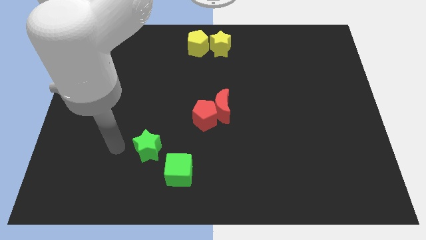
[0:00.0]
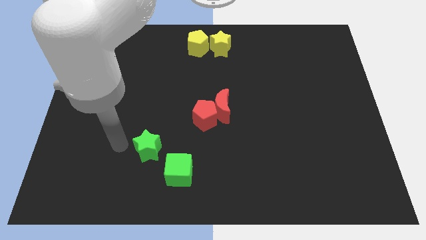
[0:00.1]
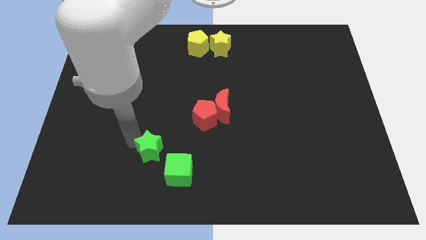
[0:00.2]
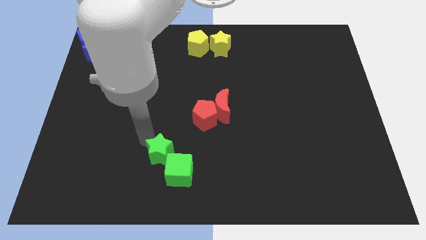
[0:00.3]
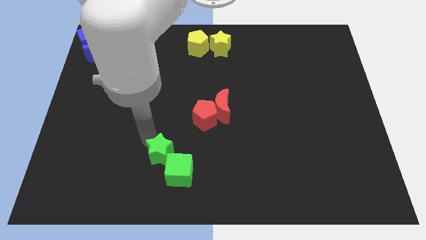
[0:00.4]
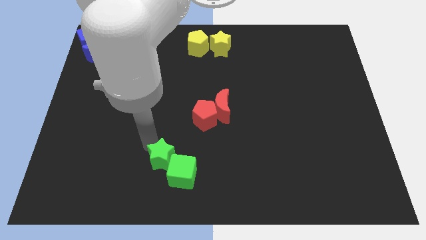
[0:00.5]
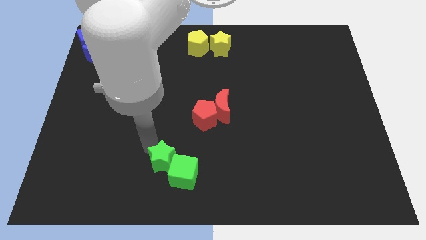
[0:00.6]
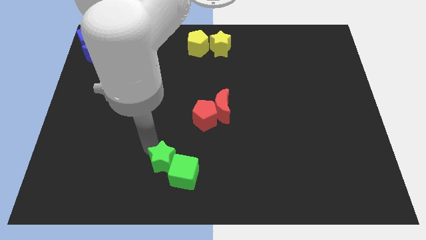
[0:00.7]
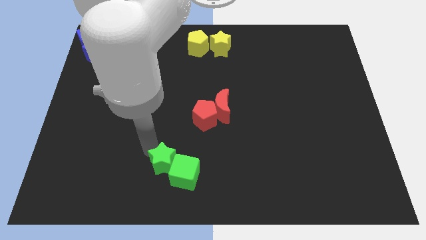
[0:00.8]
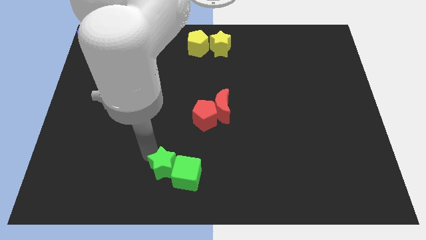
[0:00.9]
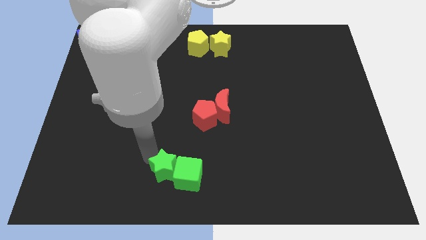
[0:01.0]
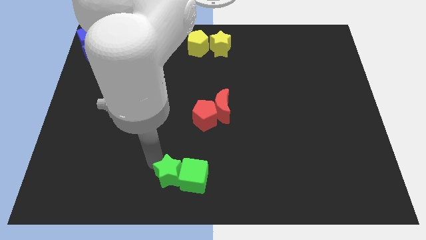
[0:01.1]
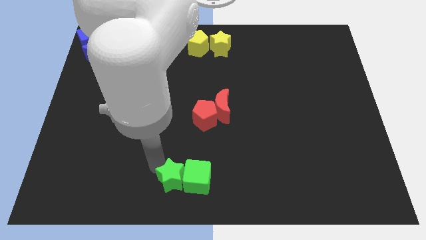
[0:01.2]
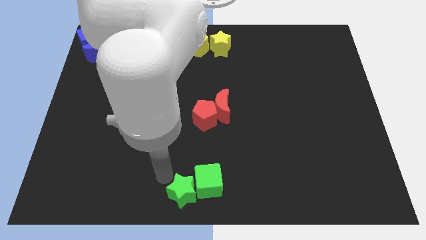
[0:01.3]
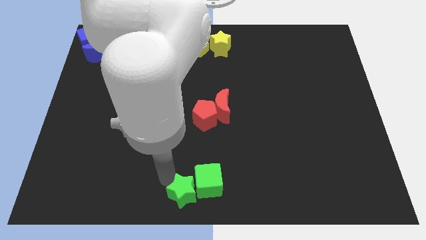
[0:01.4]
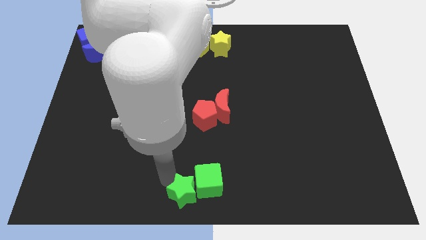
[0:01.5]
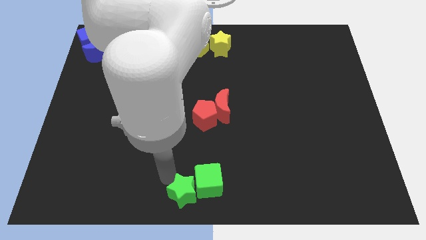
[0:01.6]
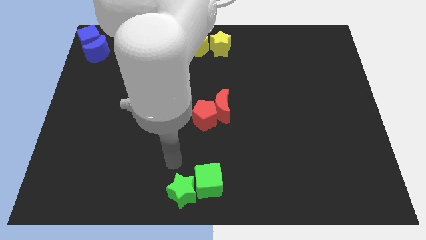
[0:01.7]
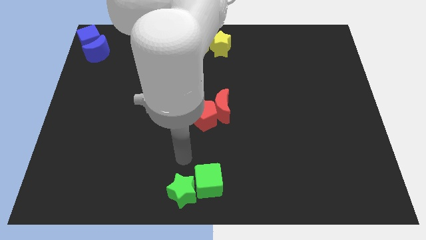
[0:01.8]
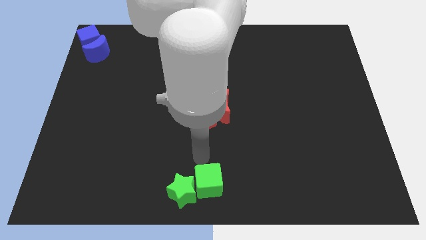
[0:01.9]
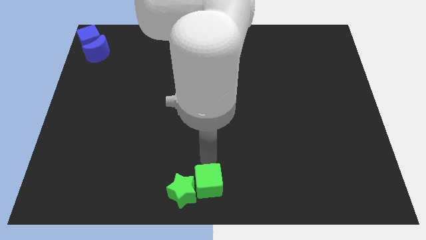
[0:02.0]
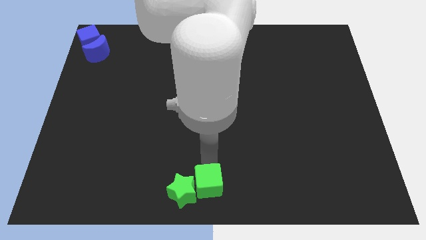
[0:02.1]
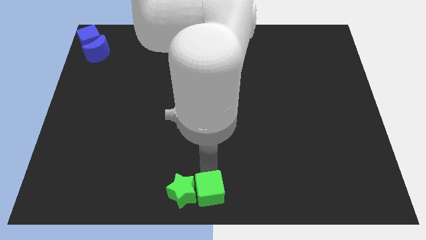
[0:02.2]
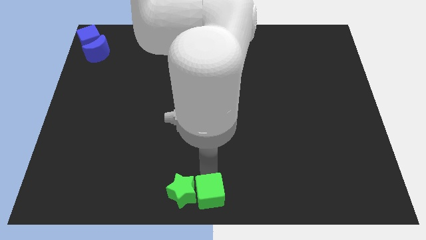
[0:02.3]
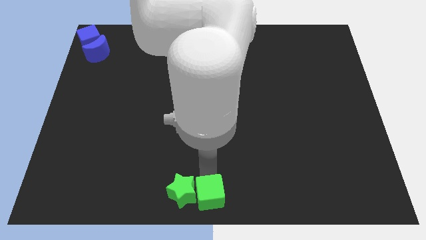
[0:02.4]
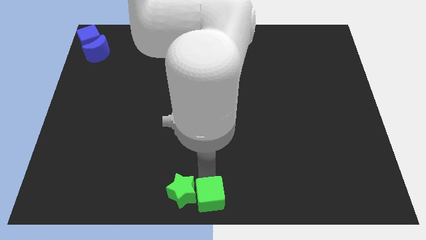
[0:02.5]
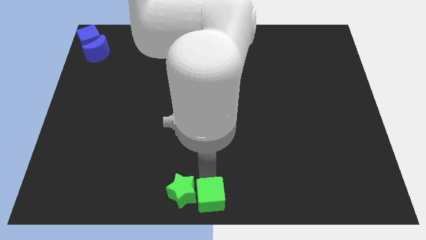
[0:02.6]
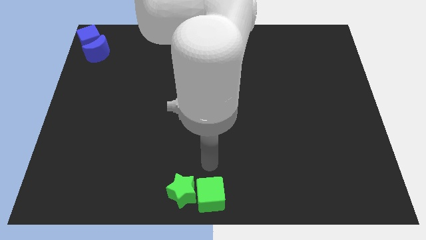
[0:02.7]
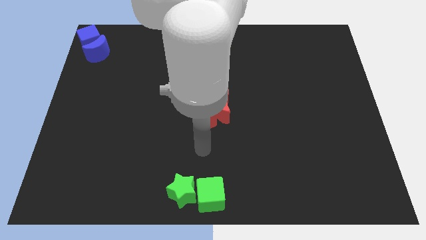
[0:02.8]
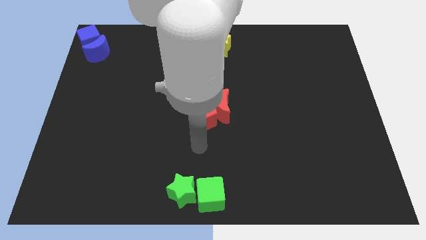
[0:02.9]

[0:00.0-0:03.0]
push the green blocks to the bottom middle of the board

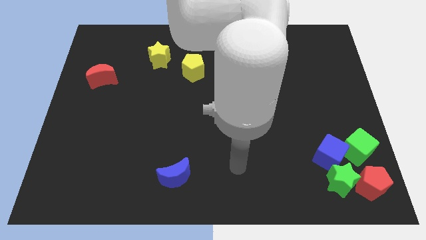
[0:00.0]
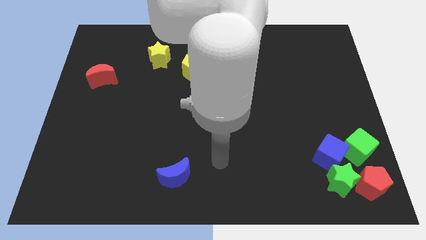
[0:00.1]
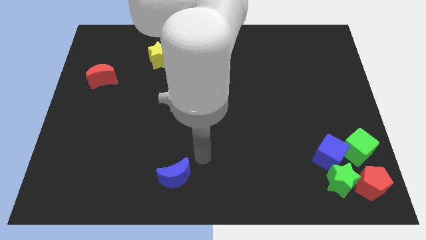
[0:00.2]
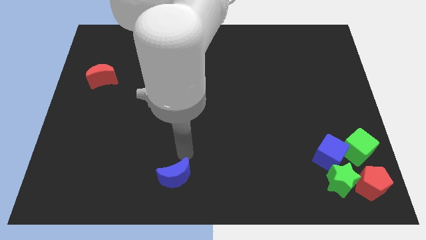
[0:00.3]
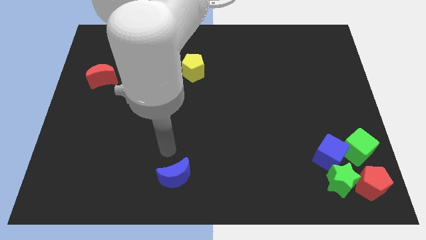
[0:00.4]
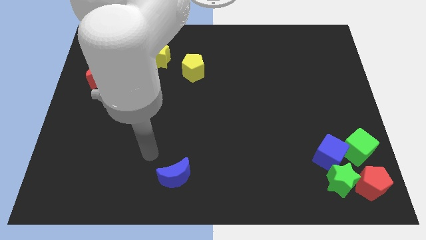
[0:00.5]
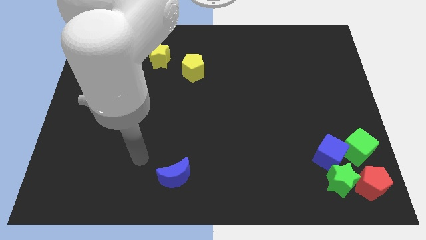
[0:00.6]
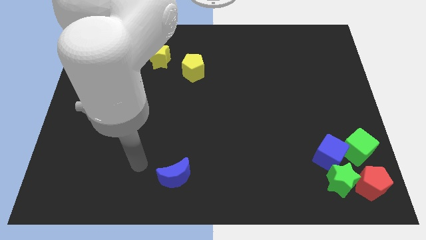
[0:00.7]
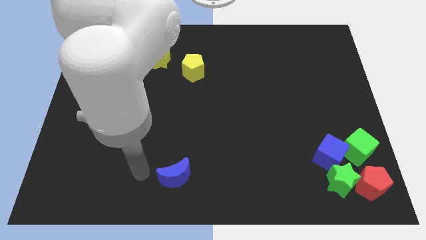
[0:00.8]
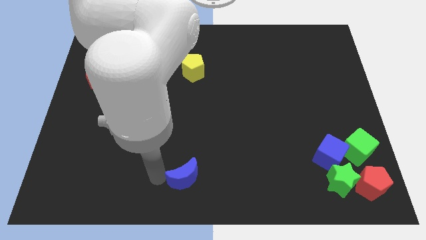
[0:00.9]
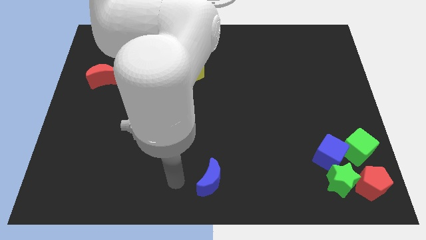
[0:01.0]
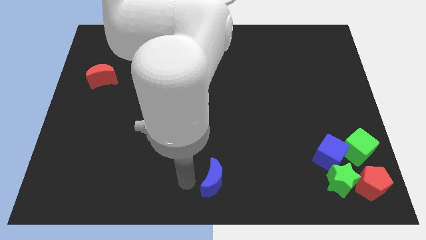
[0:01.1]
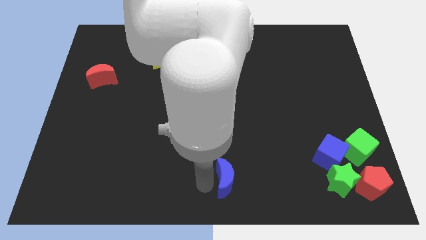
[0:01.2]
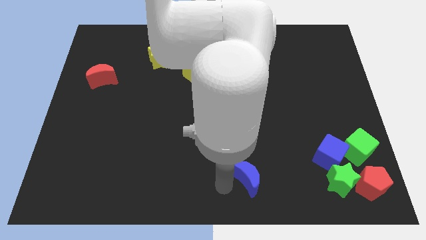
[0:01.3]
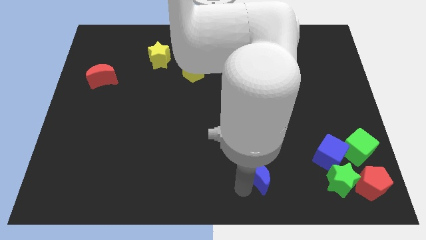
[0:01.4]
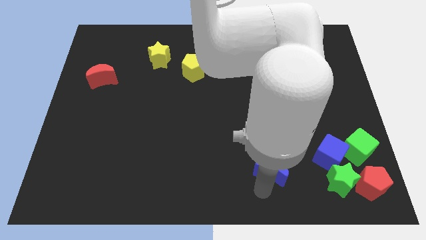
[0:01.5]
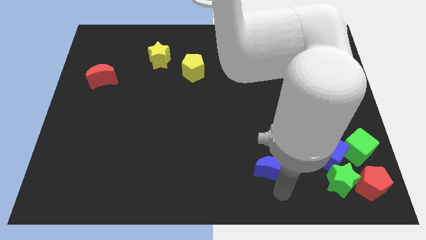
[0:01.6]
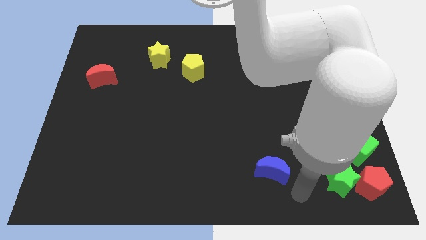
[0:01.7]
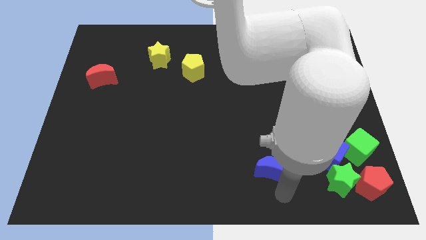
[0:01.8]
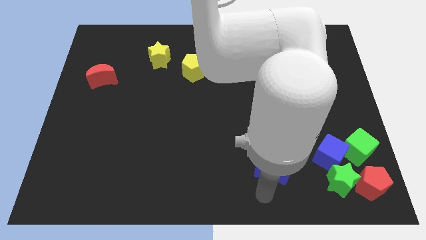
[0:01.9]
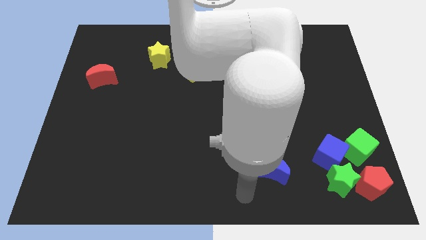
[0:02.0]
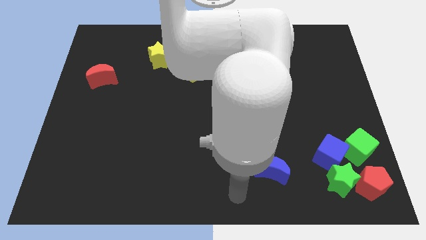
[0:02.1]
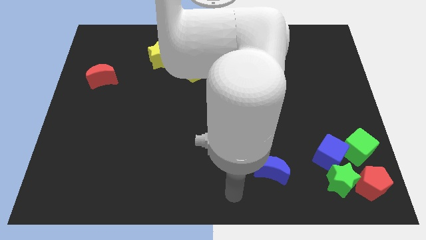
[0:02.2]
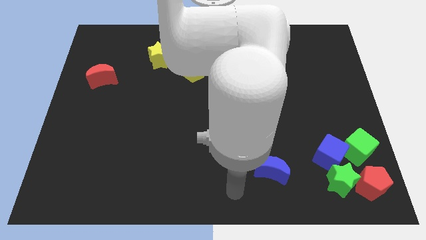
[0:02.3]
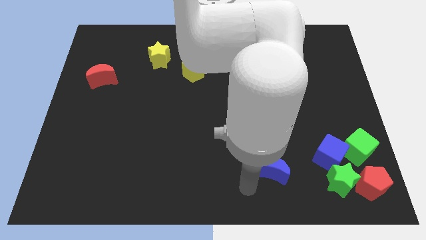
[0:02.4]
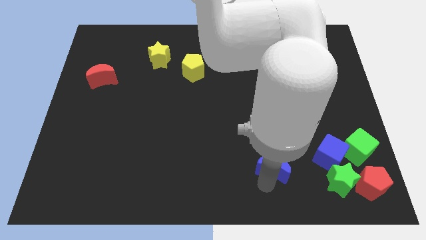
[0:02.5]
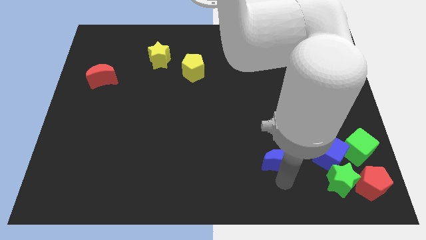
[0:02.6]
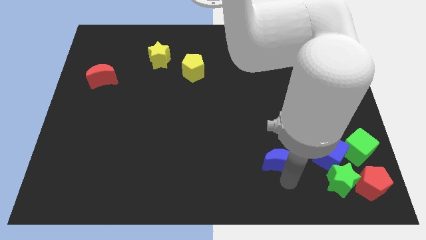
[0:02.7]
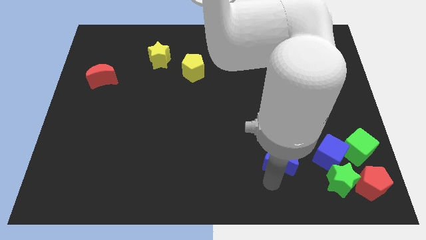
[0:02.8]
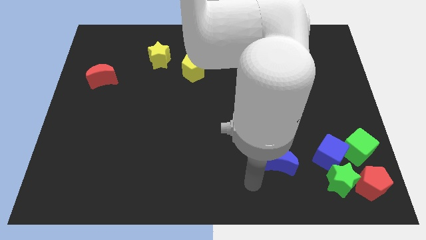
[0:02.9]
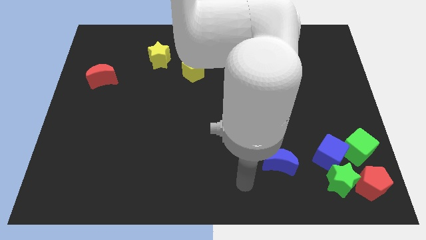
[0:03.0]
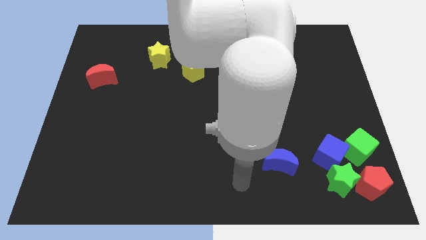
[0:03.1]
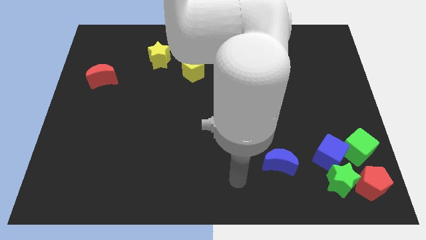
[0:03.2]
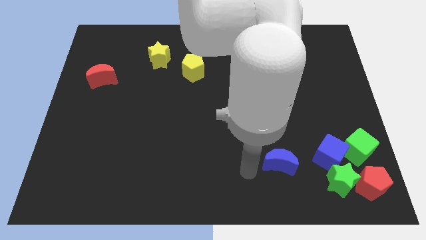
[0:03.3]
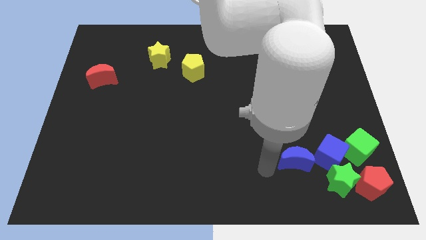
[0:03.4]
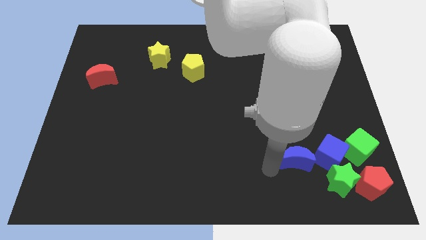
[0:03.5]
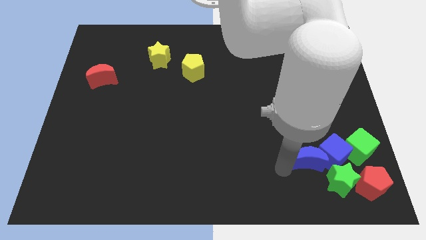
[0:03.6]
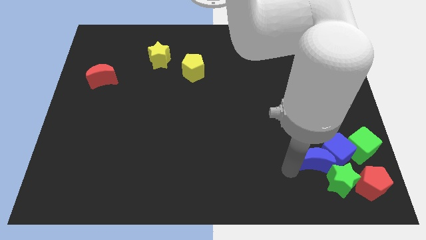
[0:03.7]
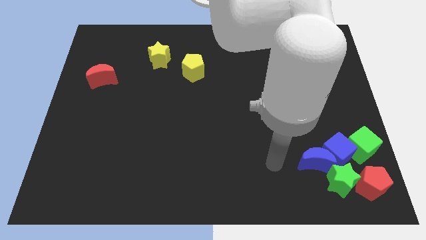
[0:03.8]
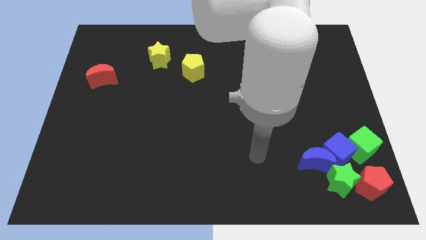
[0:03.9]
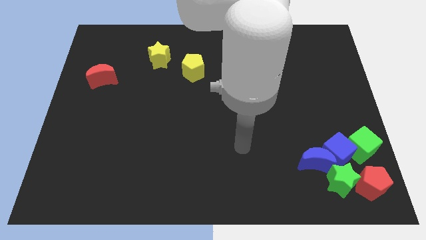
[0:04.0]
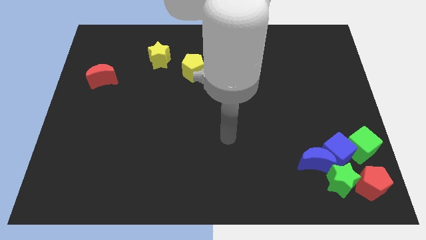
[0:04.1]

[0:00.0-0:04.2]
push the blue moon into the blue cube

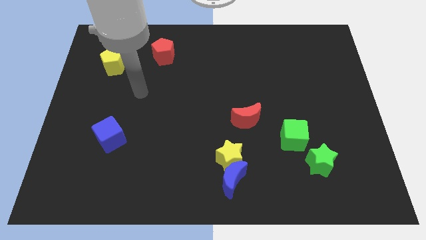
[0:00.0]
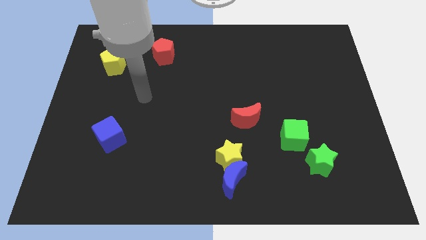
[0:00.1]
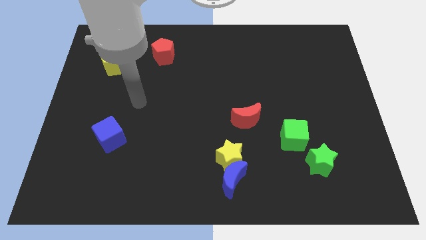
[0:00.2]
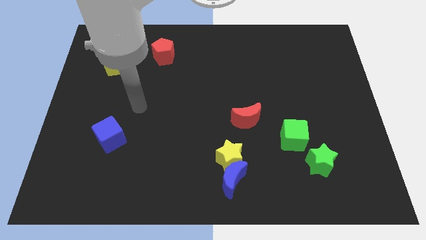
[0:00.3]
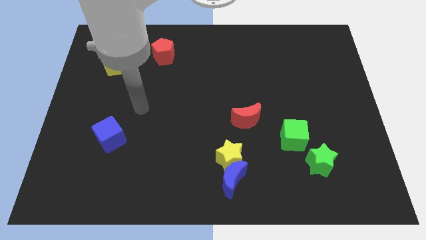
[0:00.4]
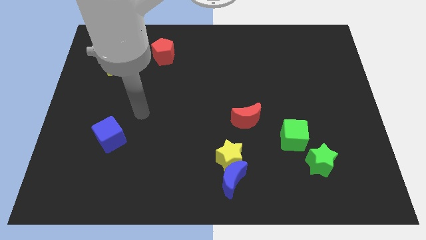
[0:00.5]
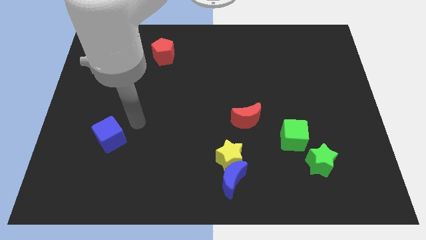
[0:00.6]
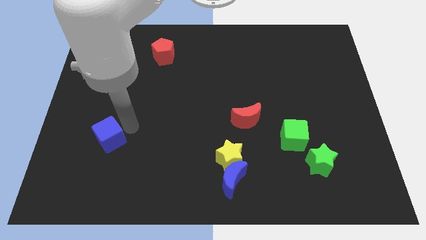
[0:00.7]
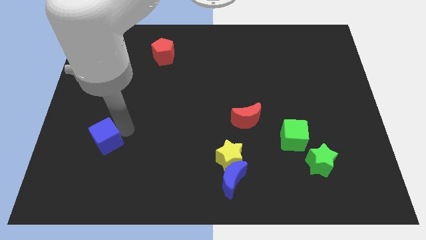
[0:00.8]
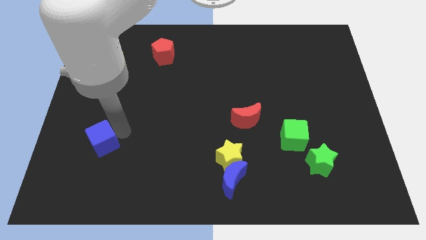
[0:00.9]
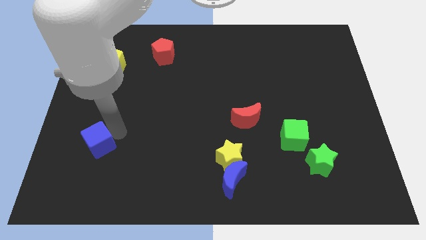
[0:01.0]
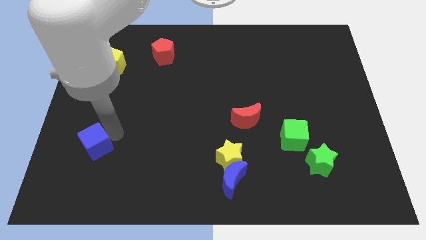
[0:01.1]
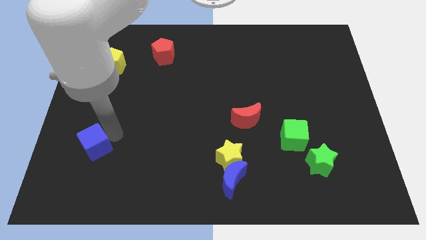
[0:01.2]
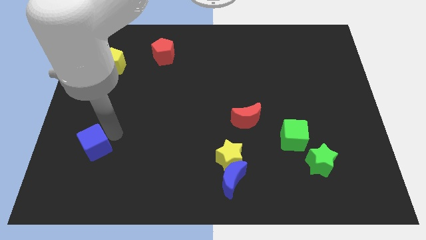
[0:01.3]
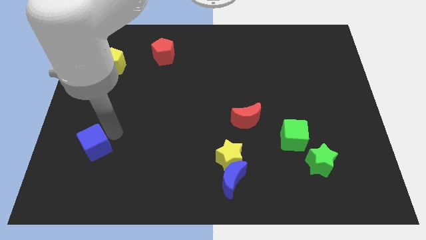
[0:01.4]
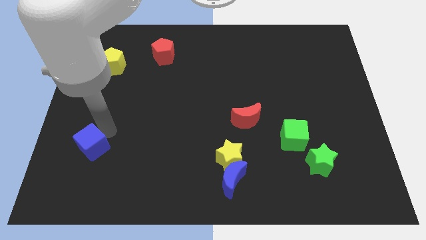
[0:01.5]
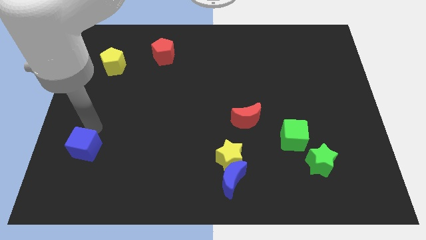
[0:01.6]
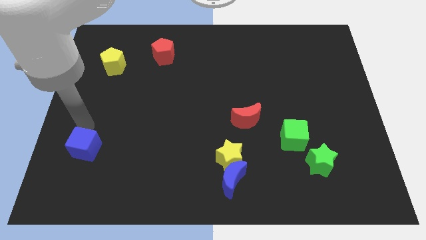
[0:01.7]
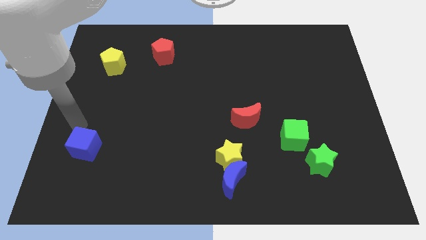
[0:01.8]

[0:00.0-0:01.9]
push the blue cube slightly to the left
